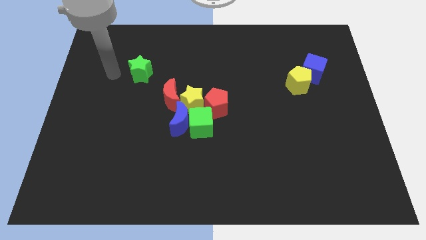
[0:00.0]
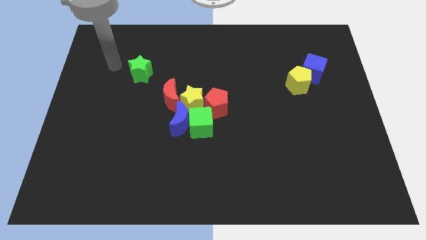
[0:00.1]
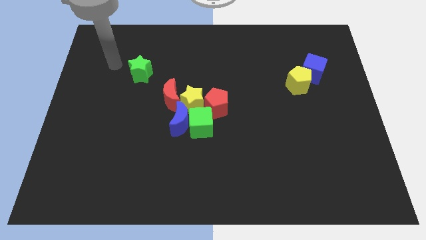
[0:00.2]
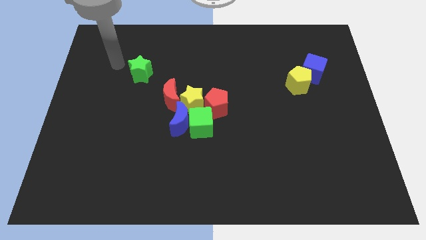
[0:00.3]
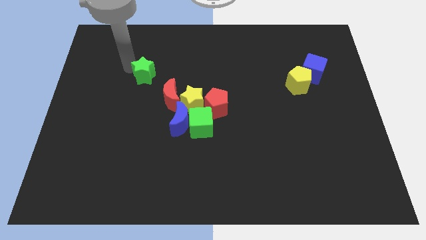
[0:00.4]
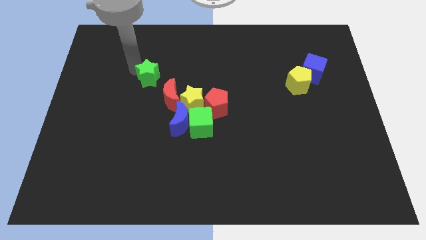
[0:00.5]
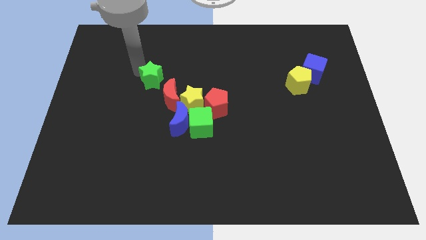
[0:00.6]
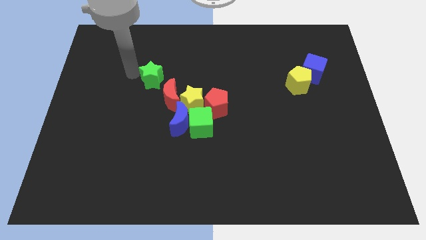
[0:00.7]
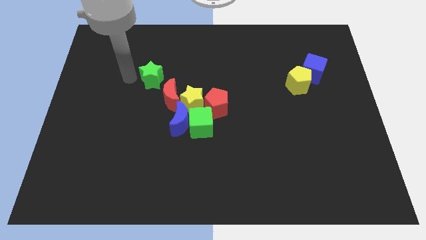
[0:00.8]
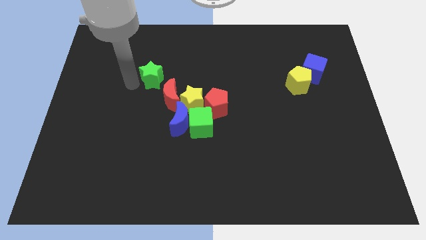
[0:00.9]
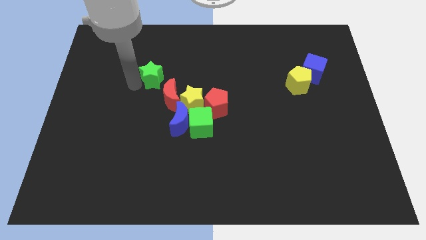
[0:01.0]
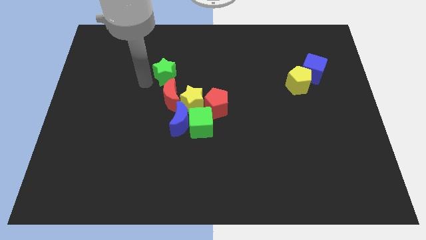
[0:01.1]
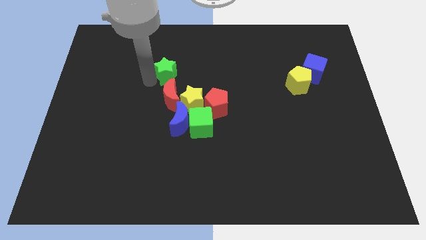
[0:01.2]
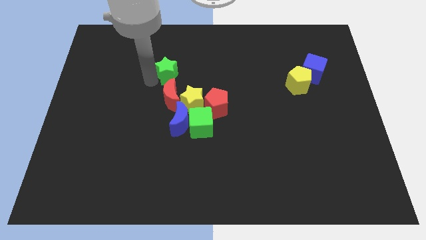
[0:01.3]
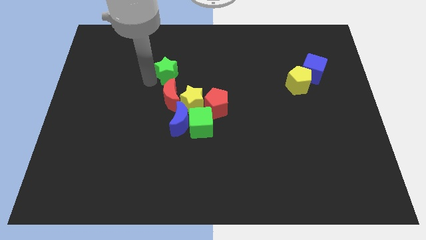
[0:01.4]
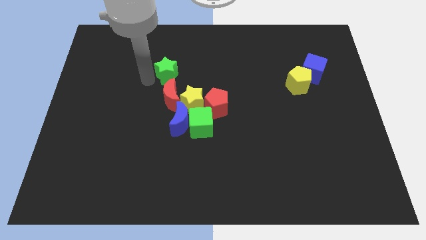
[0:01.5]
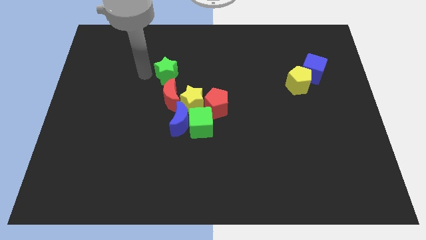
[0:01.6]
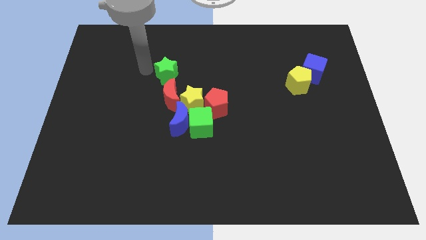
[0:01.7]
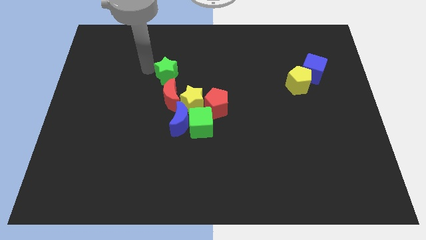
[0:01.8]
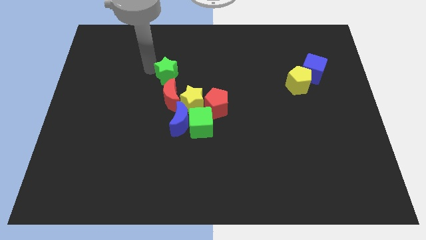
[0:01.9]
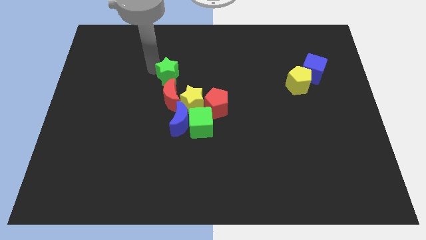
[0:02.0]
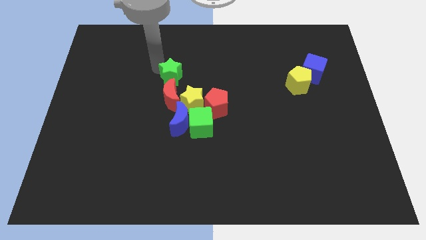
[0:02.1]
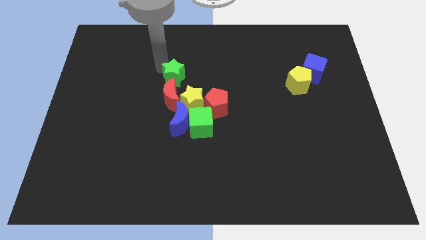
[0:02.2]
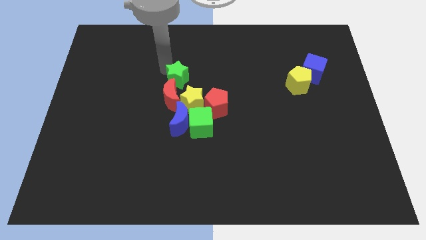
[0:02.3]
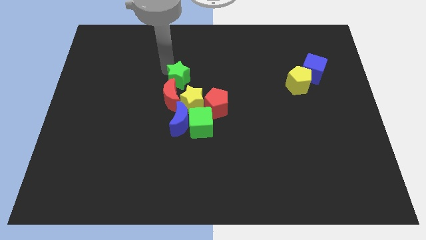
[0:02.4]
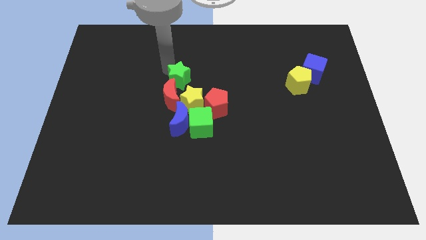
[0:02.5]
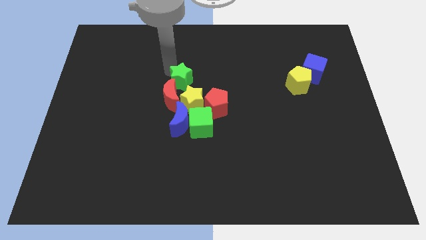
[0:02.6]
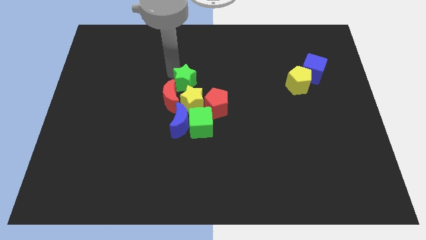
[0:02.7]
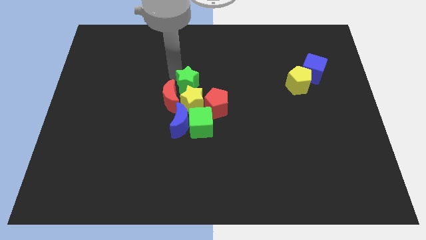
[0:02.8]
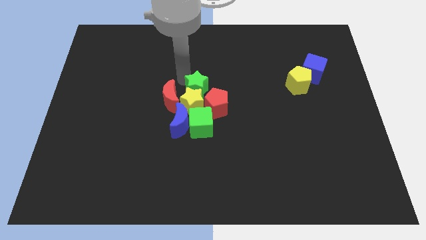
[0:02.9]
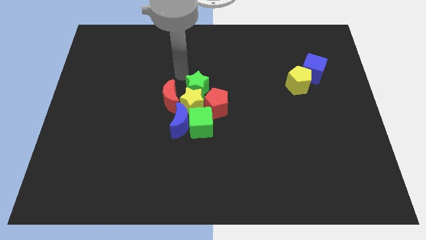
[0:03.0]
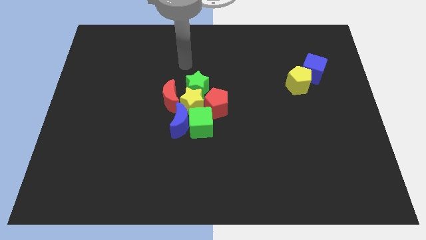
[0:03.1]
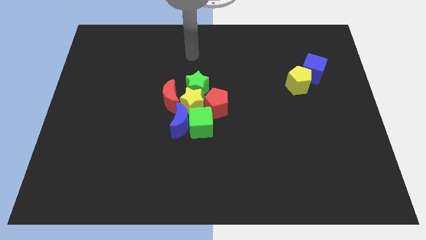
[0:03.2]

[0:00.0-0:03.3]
place the green star at the top of yellow star

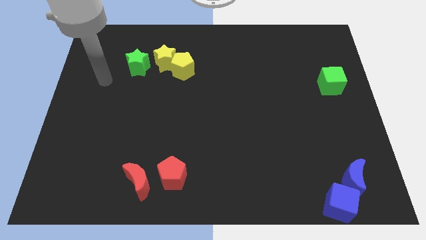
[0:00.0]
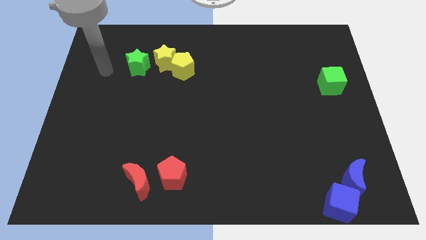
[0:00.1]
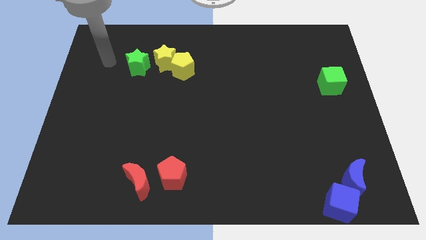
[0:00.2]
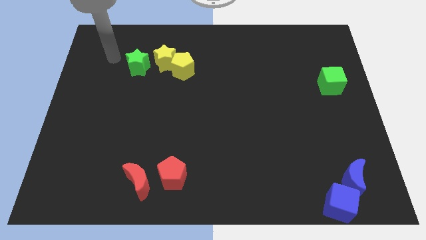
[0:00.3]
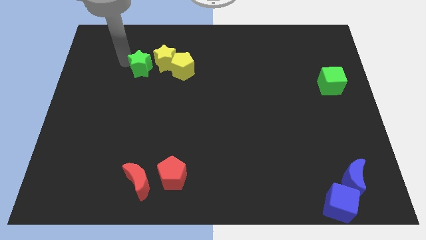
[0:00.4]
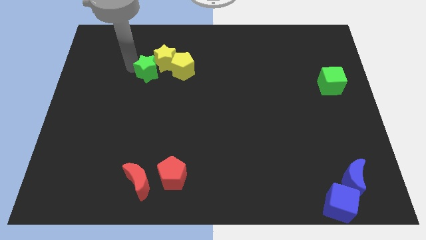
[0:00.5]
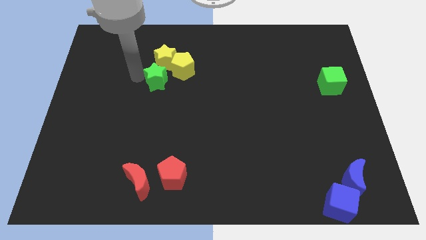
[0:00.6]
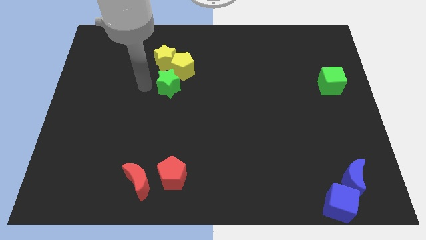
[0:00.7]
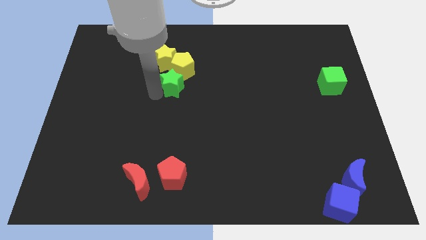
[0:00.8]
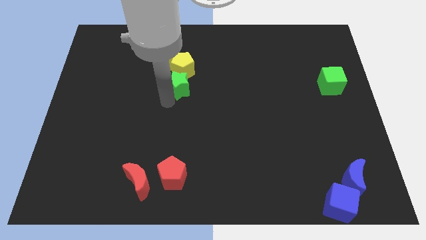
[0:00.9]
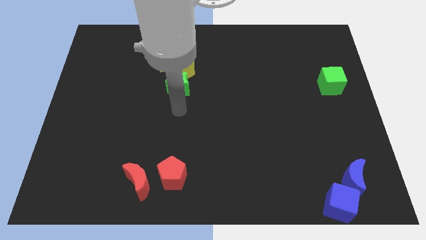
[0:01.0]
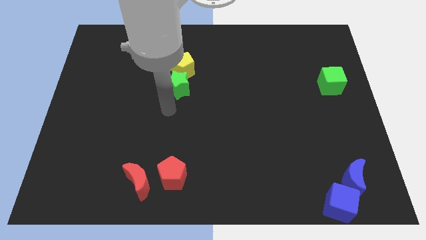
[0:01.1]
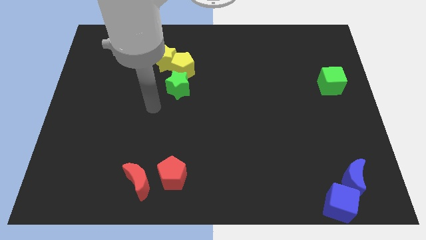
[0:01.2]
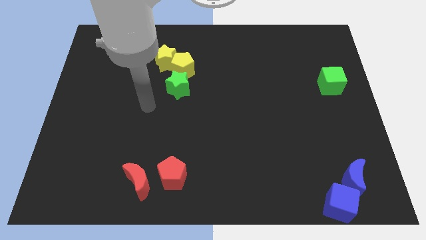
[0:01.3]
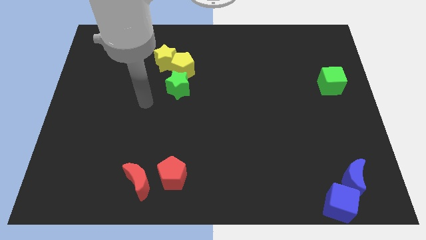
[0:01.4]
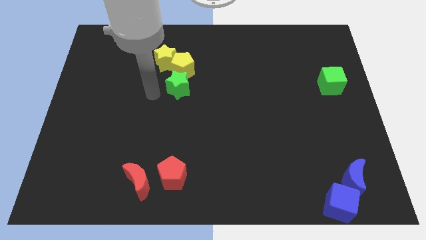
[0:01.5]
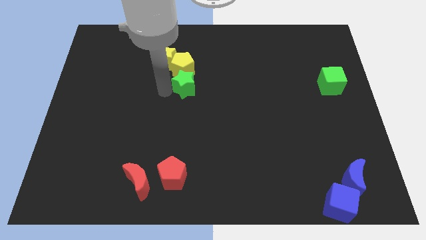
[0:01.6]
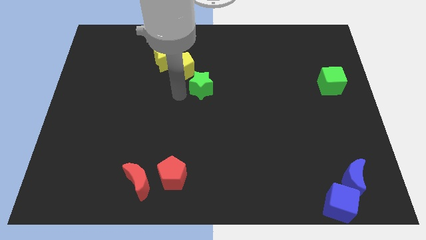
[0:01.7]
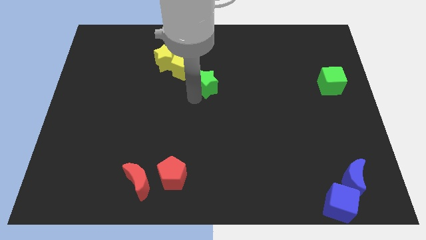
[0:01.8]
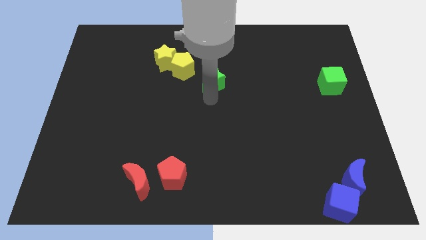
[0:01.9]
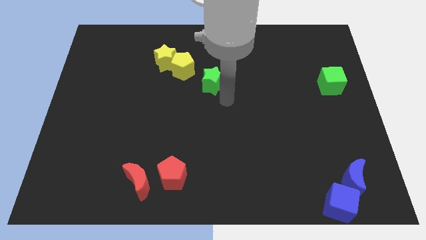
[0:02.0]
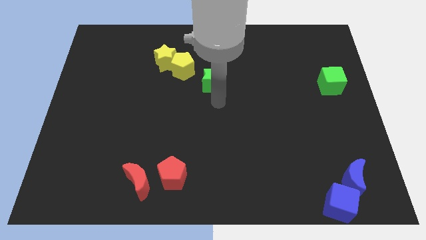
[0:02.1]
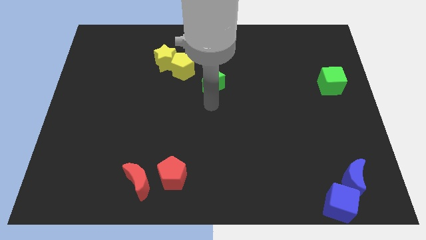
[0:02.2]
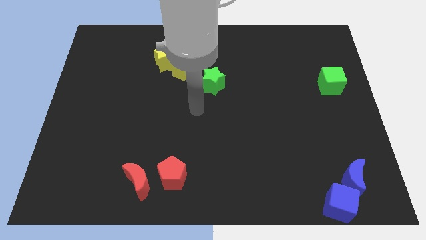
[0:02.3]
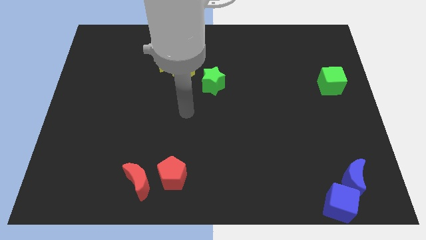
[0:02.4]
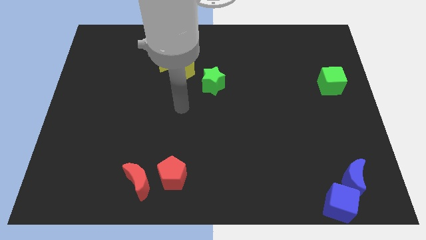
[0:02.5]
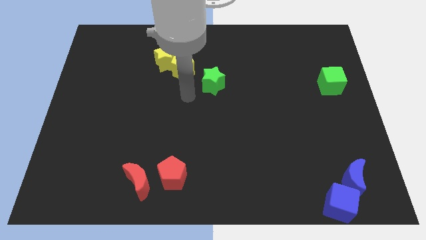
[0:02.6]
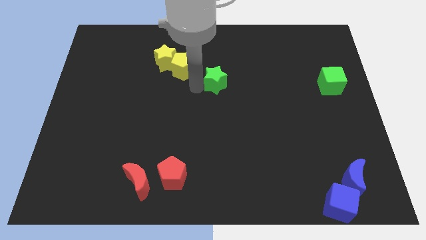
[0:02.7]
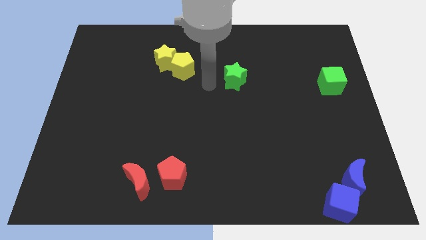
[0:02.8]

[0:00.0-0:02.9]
push the green star between the yellow pentagon and green cube

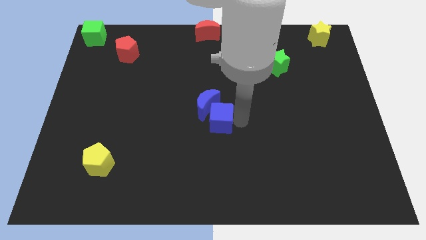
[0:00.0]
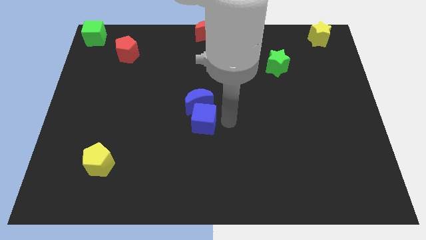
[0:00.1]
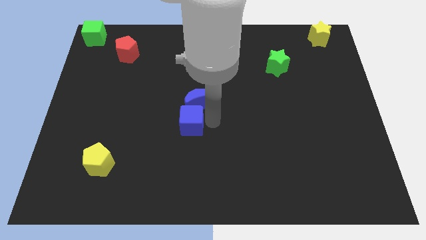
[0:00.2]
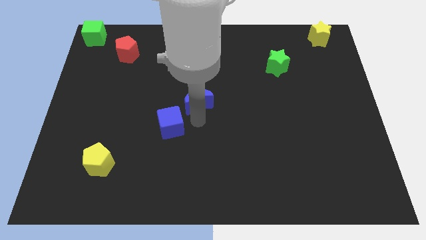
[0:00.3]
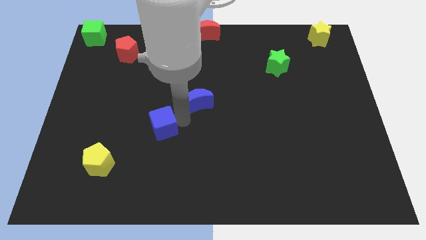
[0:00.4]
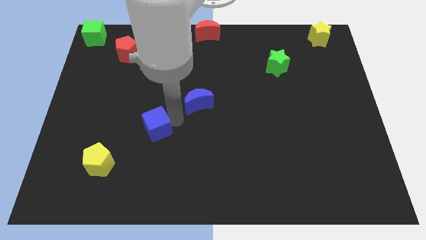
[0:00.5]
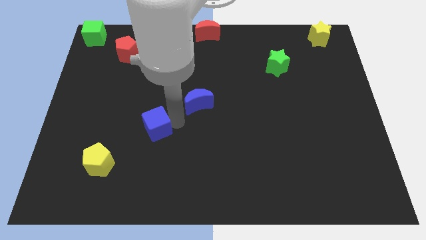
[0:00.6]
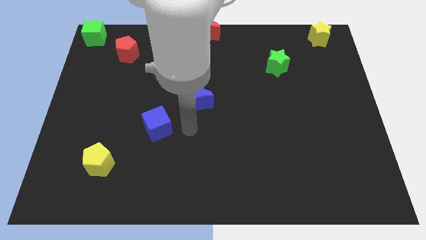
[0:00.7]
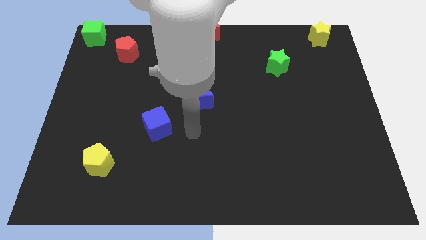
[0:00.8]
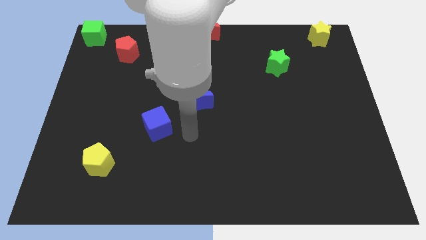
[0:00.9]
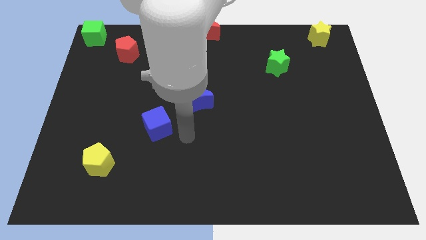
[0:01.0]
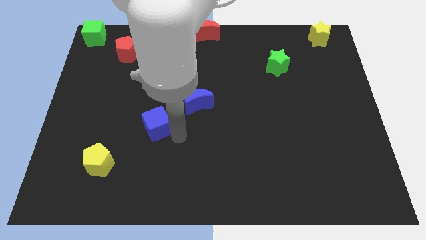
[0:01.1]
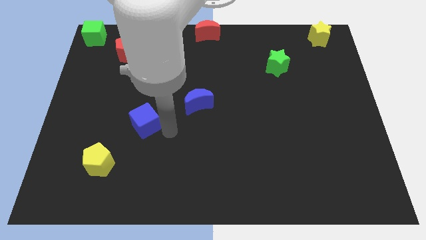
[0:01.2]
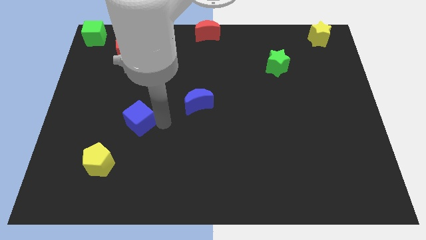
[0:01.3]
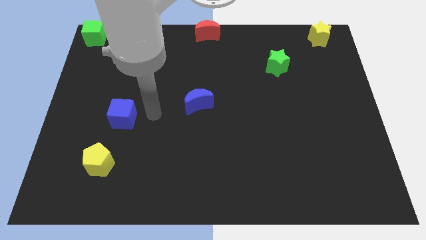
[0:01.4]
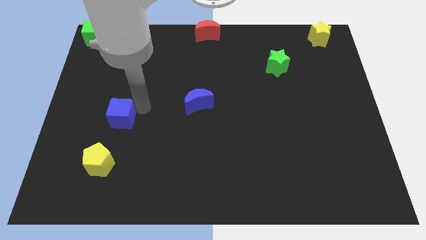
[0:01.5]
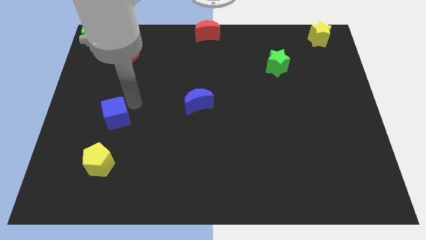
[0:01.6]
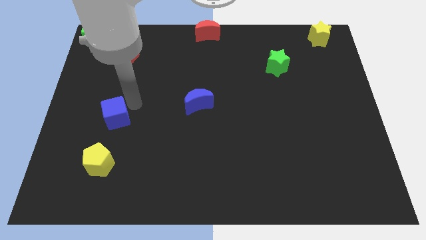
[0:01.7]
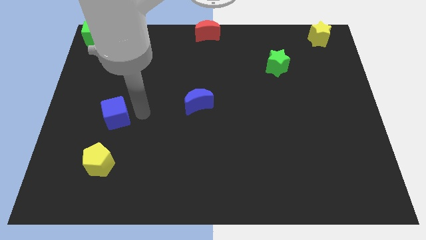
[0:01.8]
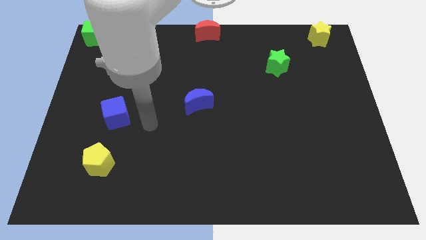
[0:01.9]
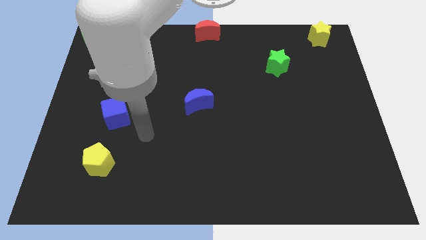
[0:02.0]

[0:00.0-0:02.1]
separate the blue cube from the blue crescent

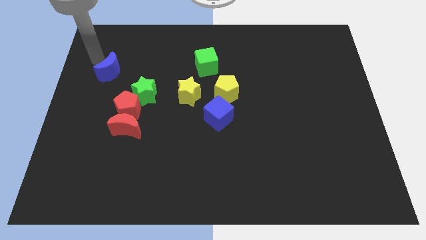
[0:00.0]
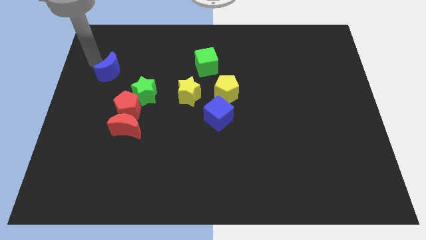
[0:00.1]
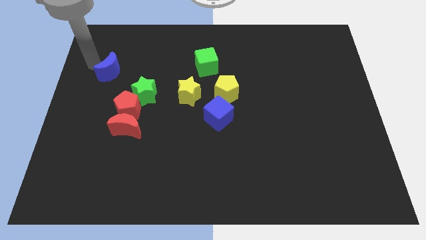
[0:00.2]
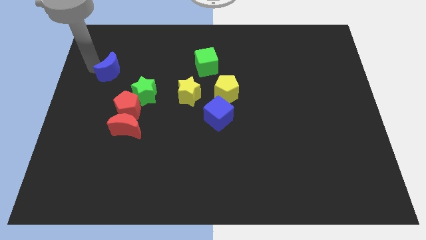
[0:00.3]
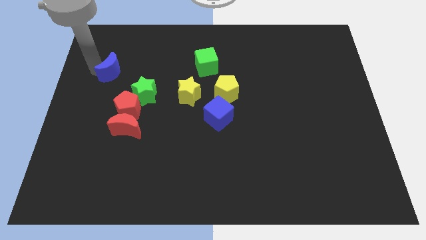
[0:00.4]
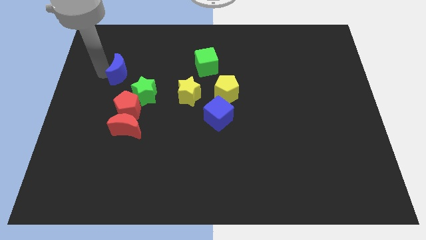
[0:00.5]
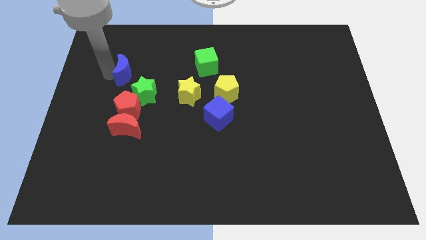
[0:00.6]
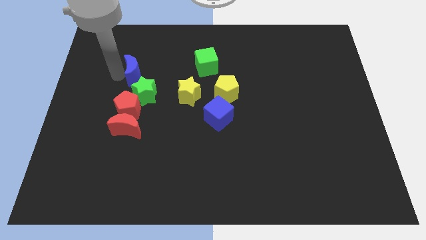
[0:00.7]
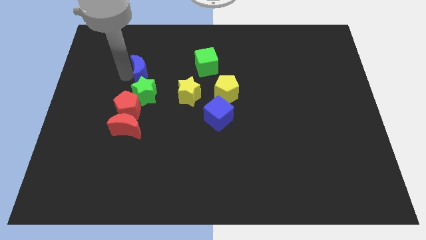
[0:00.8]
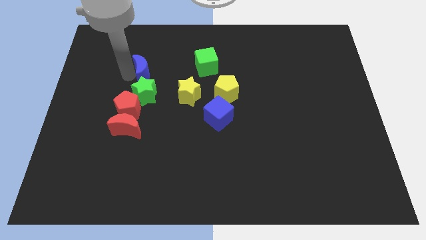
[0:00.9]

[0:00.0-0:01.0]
push the blue moon slightly to the right
